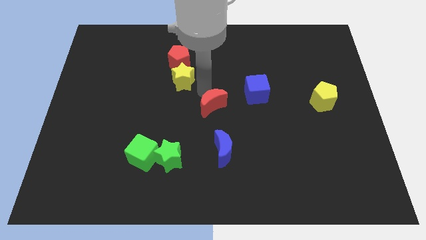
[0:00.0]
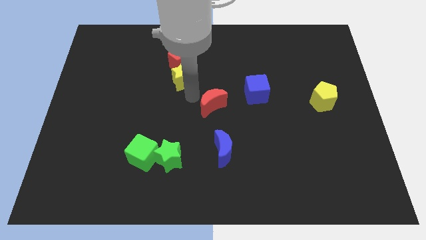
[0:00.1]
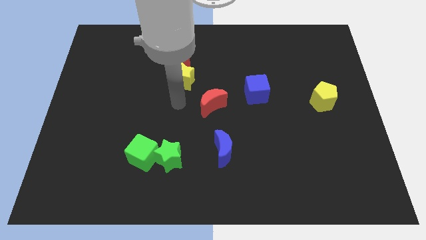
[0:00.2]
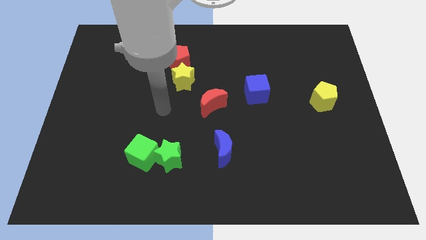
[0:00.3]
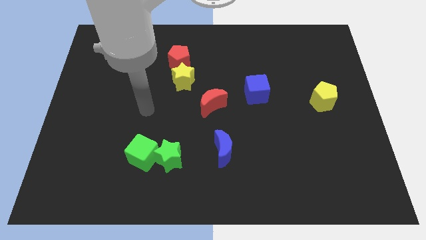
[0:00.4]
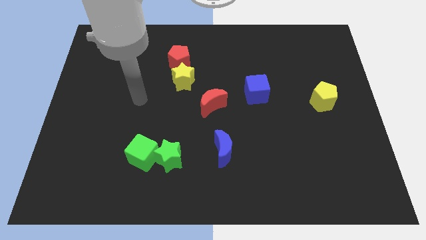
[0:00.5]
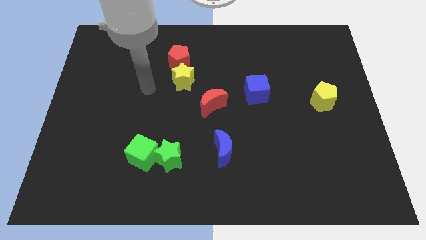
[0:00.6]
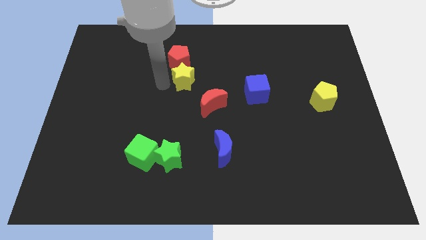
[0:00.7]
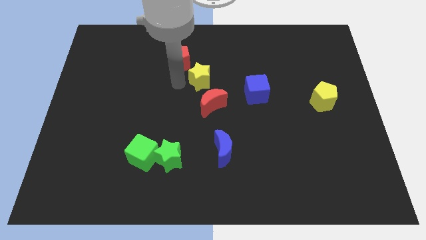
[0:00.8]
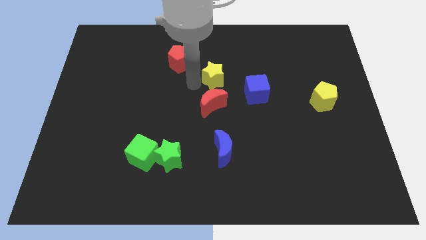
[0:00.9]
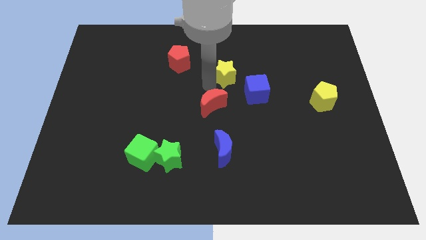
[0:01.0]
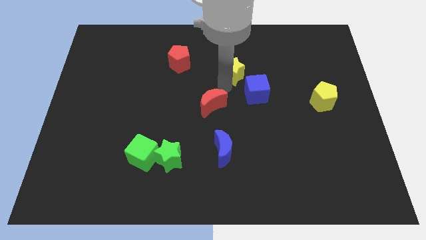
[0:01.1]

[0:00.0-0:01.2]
place your arm above red moon

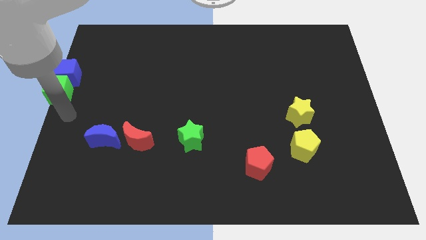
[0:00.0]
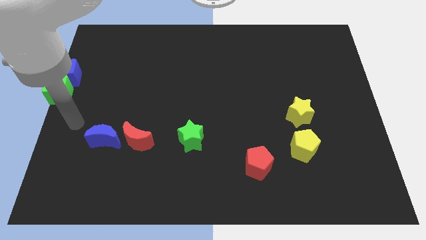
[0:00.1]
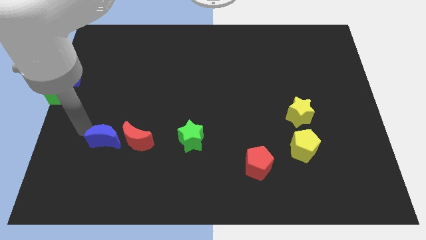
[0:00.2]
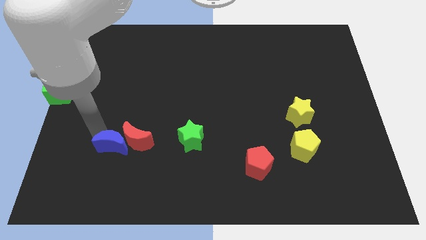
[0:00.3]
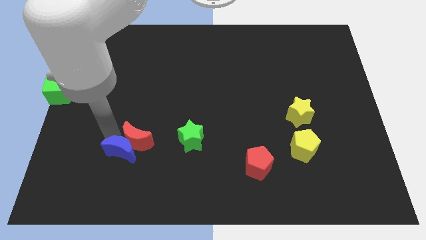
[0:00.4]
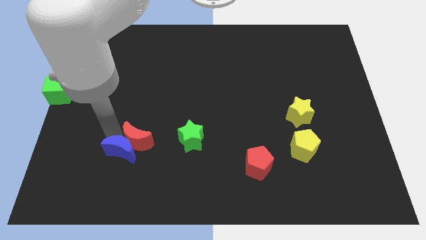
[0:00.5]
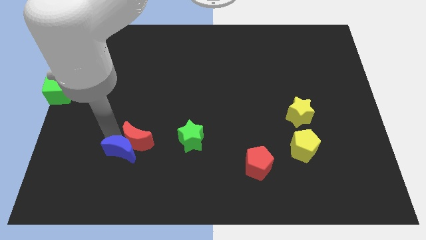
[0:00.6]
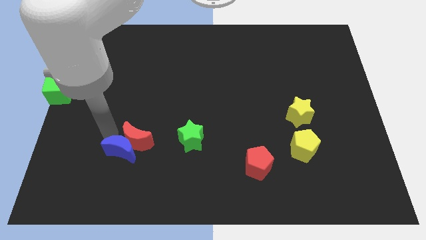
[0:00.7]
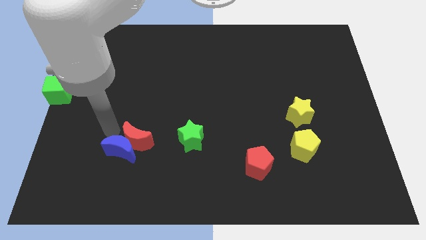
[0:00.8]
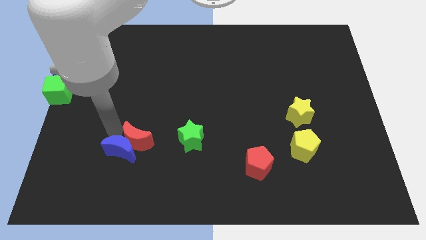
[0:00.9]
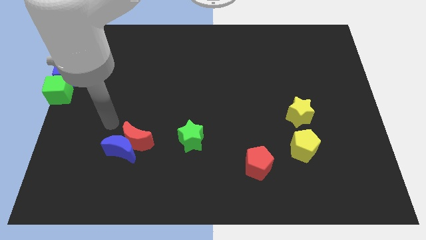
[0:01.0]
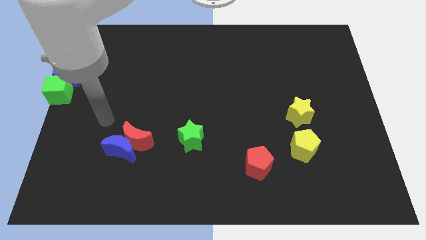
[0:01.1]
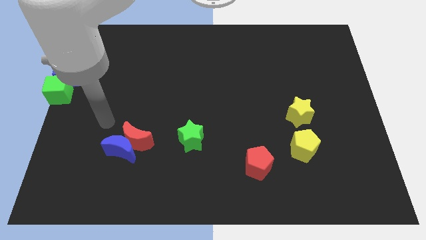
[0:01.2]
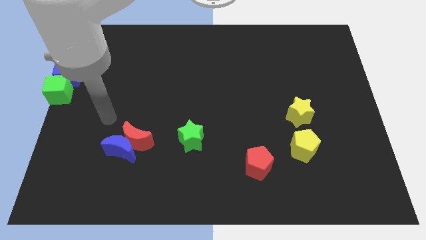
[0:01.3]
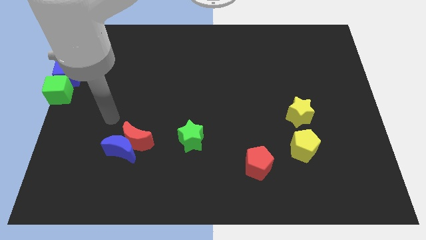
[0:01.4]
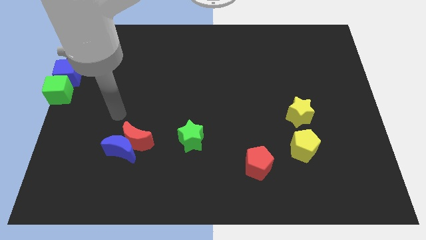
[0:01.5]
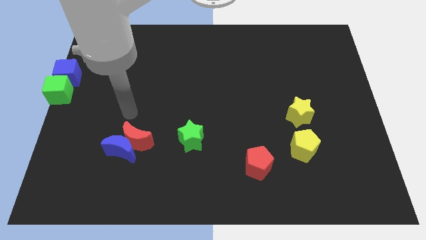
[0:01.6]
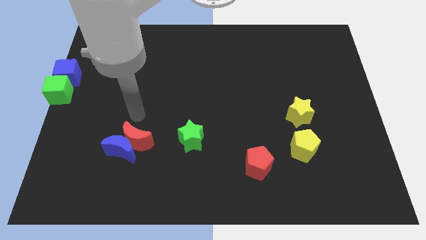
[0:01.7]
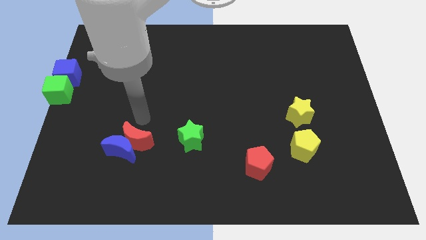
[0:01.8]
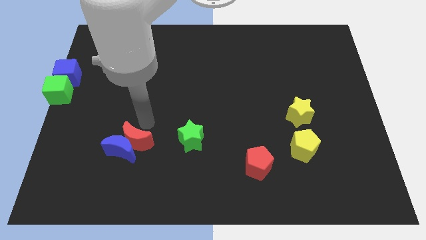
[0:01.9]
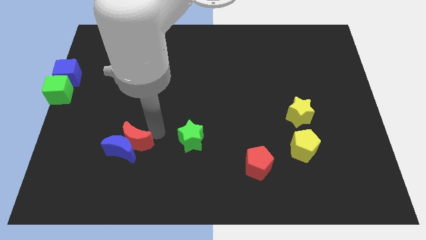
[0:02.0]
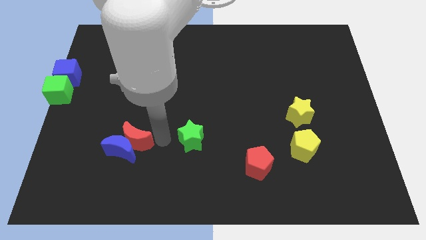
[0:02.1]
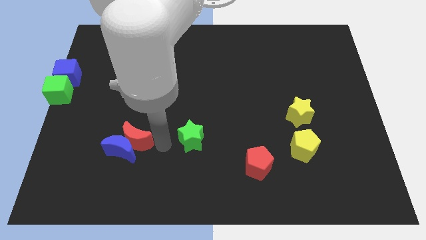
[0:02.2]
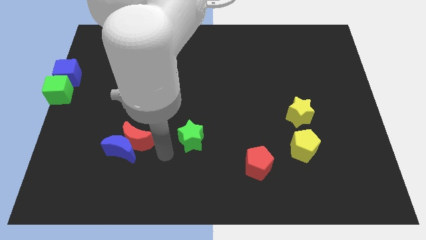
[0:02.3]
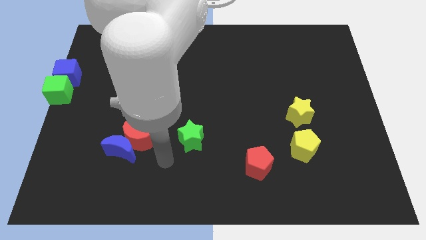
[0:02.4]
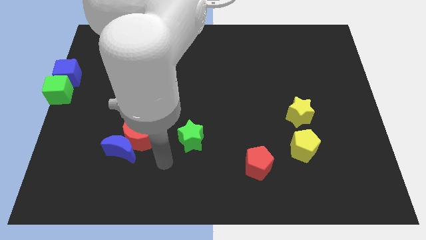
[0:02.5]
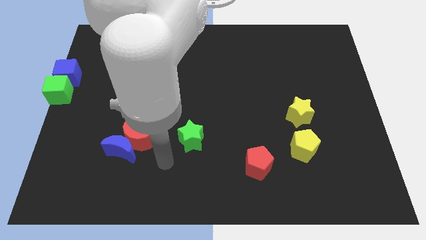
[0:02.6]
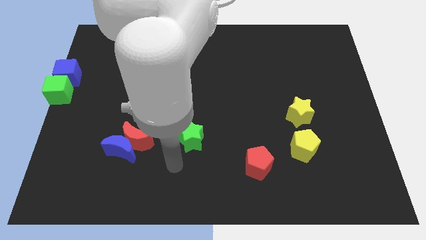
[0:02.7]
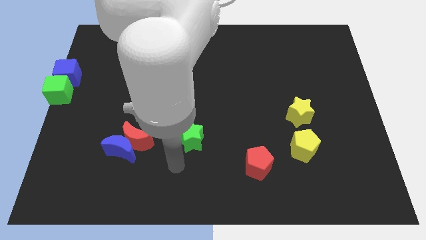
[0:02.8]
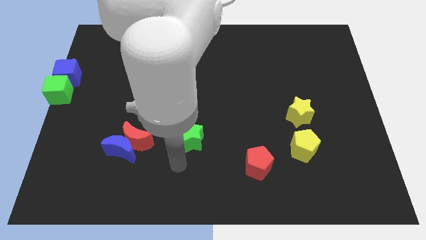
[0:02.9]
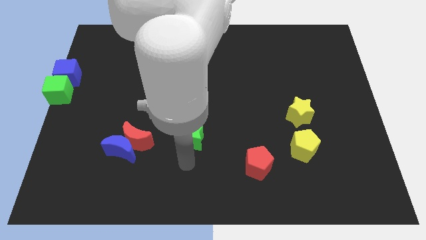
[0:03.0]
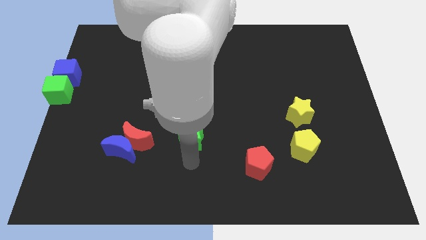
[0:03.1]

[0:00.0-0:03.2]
push the blue moon into the red moon

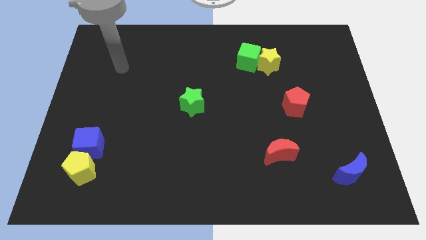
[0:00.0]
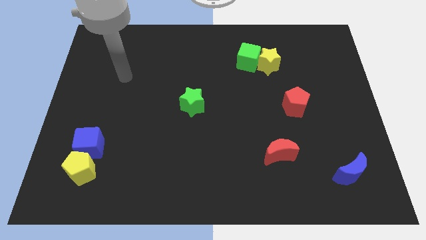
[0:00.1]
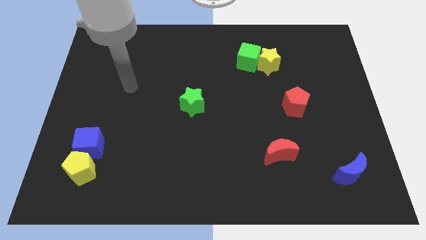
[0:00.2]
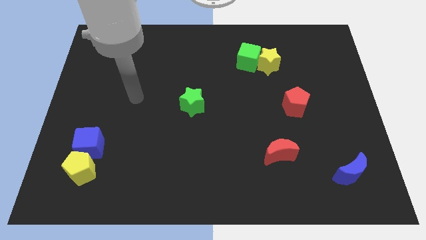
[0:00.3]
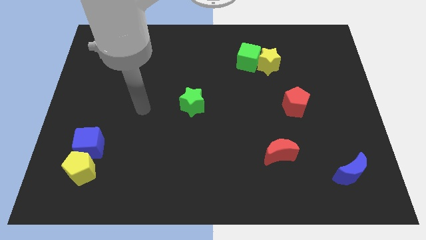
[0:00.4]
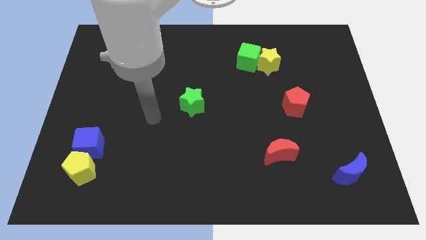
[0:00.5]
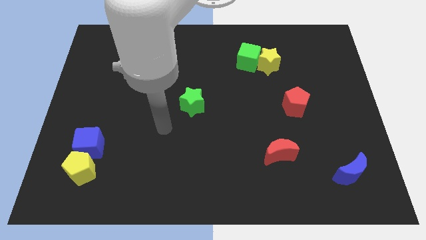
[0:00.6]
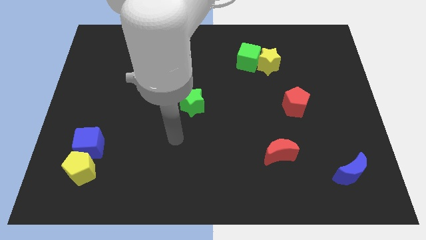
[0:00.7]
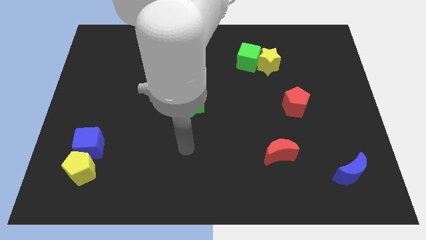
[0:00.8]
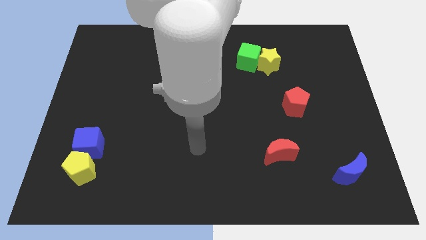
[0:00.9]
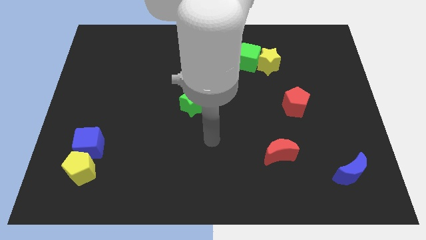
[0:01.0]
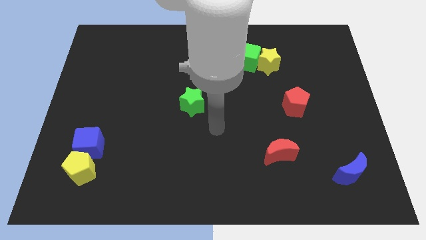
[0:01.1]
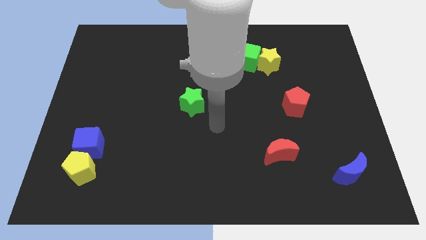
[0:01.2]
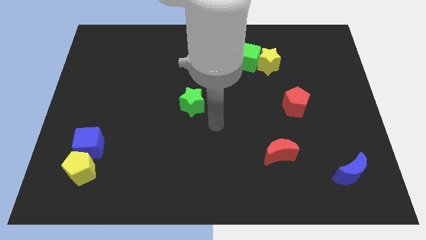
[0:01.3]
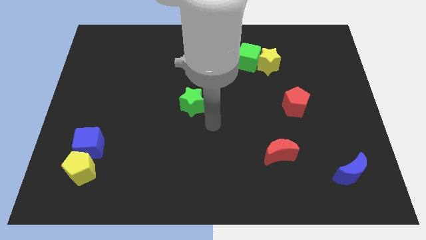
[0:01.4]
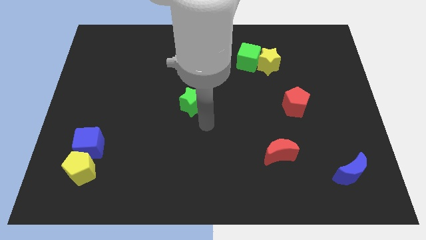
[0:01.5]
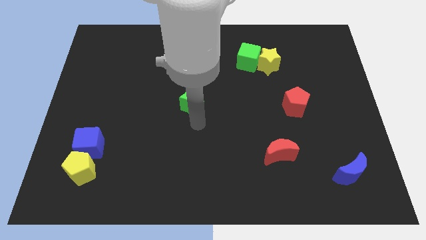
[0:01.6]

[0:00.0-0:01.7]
place the arm at the bottom of the green star

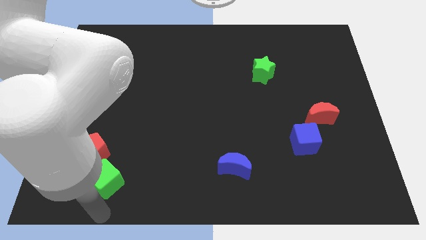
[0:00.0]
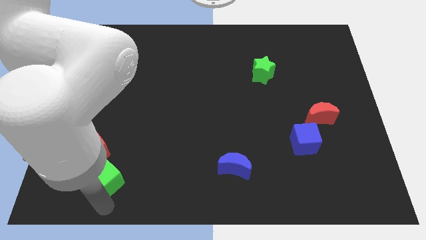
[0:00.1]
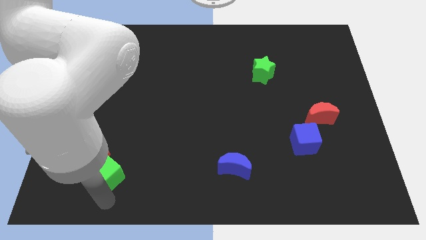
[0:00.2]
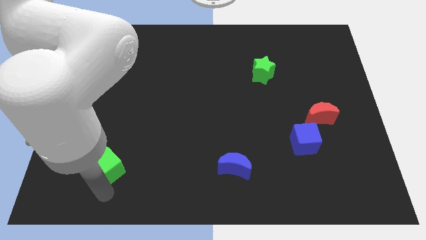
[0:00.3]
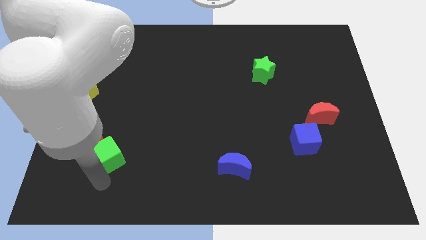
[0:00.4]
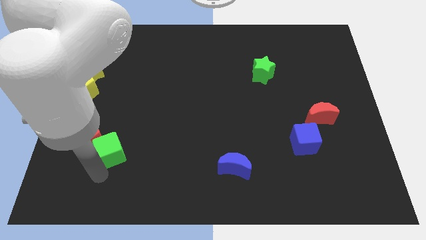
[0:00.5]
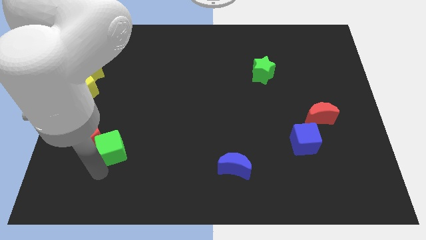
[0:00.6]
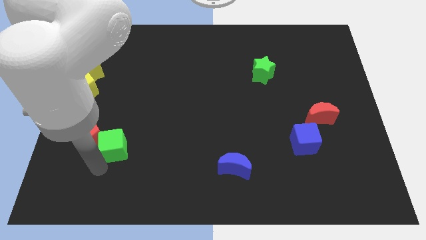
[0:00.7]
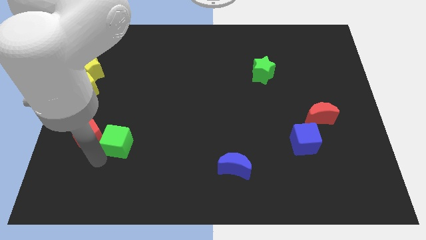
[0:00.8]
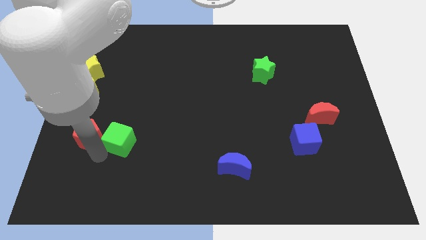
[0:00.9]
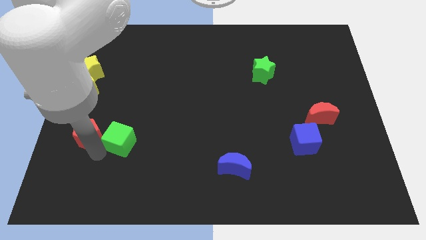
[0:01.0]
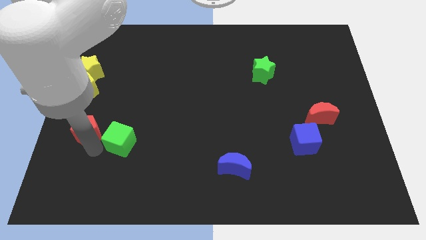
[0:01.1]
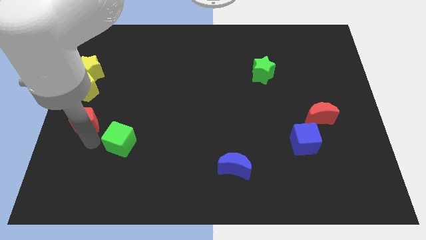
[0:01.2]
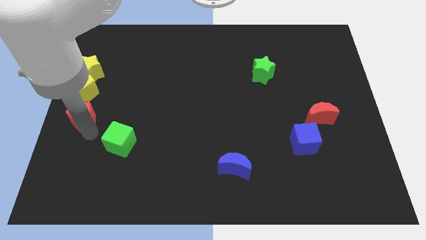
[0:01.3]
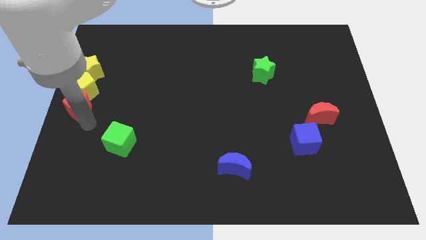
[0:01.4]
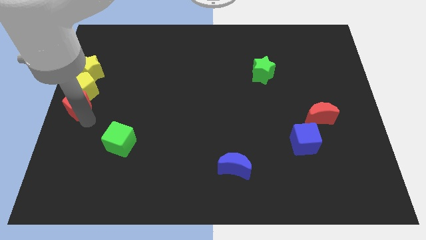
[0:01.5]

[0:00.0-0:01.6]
separate the red pentagon and green cube

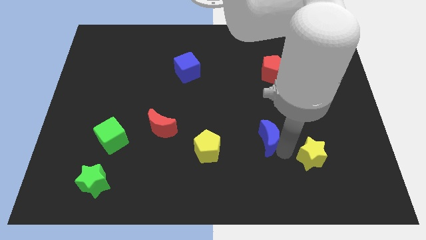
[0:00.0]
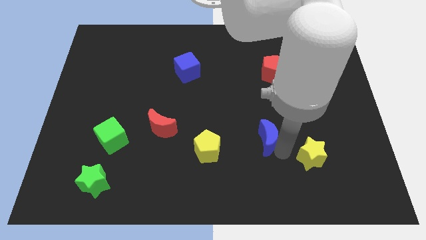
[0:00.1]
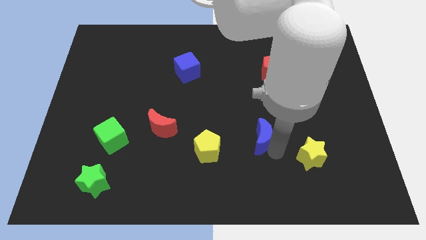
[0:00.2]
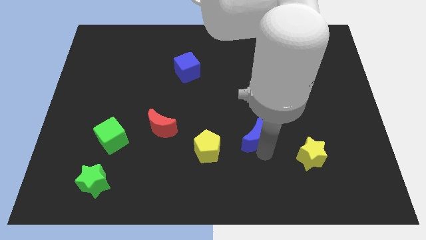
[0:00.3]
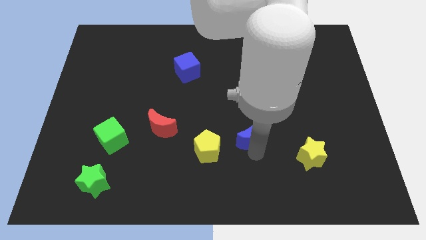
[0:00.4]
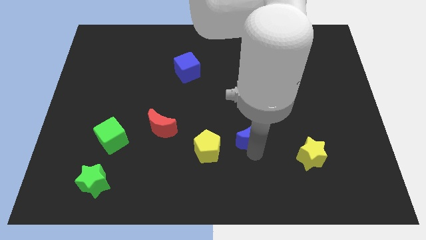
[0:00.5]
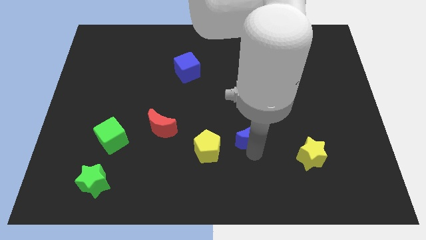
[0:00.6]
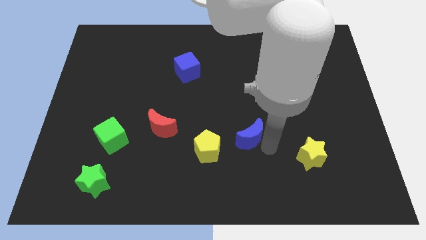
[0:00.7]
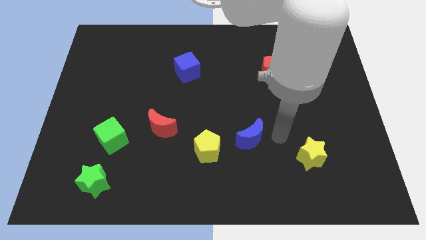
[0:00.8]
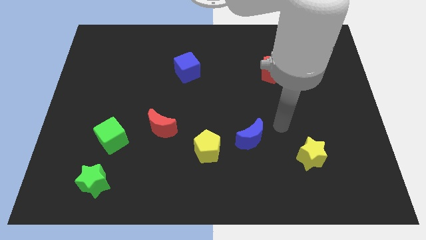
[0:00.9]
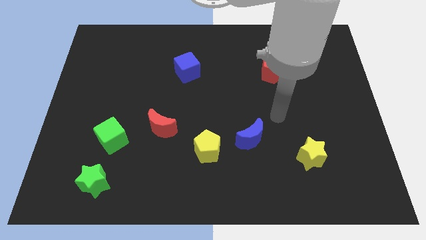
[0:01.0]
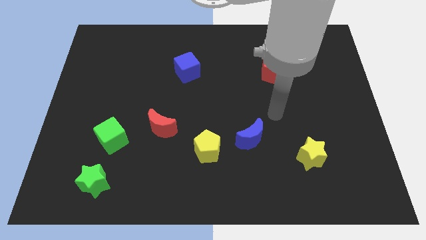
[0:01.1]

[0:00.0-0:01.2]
move blue moon slightly left

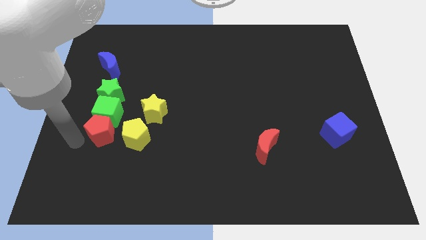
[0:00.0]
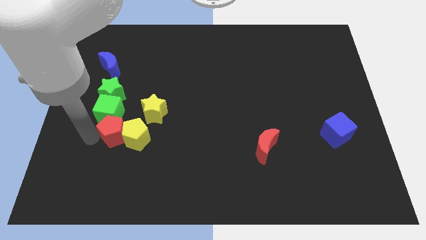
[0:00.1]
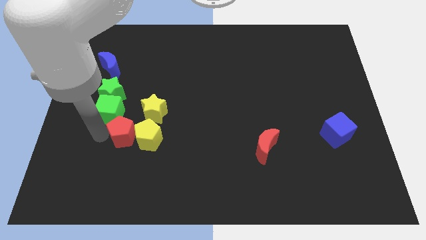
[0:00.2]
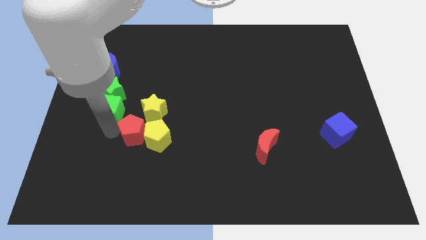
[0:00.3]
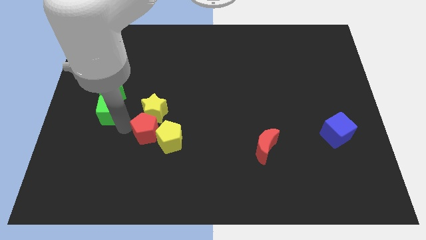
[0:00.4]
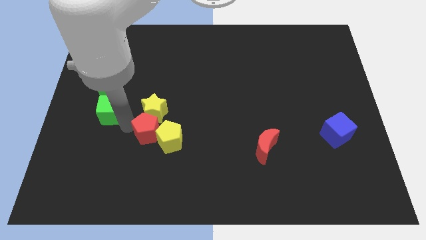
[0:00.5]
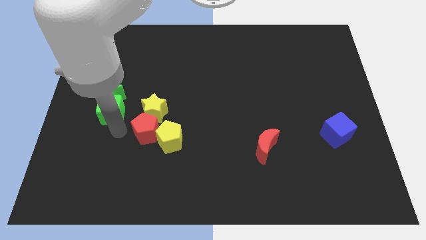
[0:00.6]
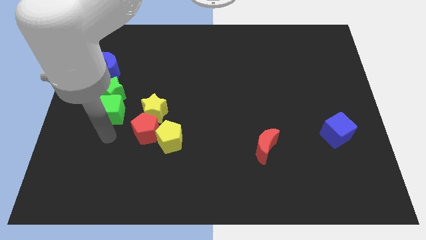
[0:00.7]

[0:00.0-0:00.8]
place the red pentagon down to the yellow star
